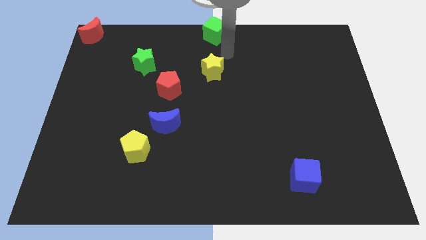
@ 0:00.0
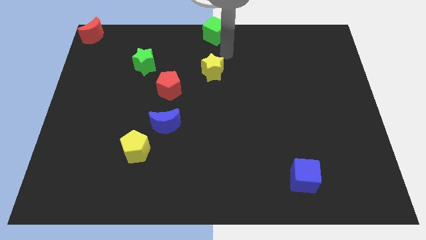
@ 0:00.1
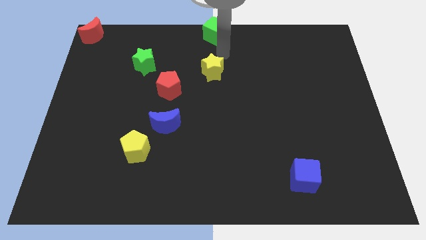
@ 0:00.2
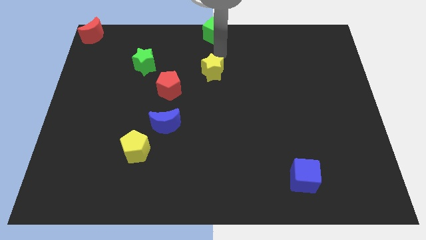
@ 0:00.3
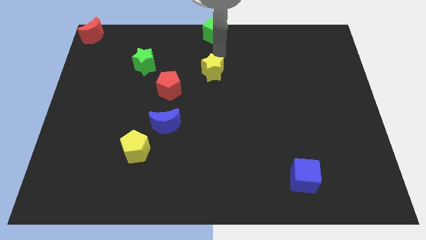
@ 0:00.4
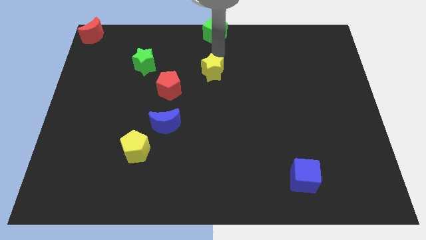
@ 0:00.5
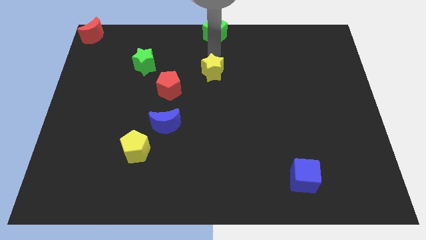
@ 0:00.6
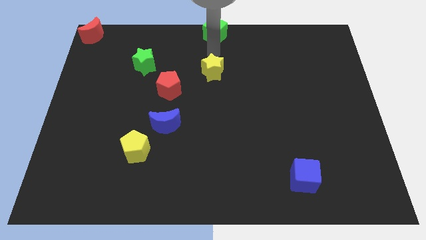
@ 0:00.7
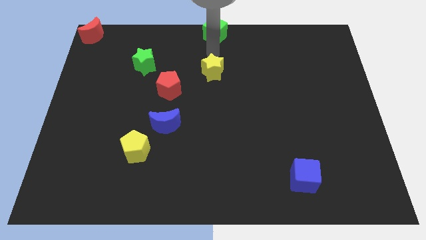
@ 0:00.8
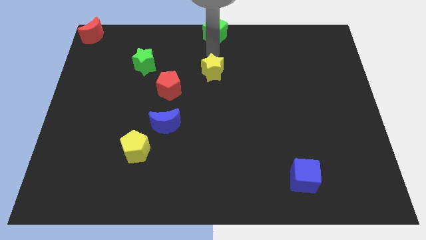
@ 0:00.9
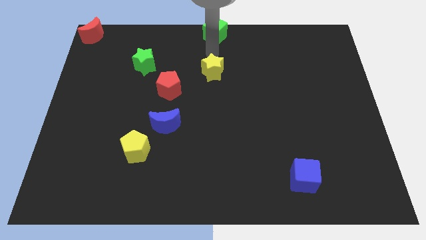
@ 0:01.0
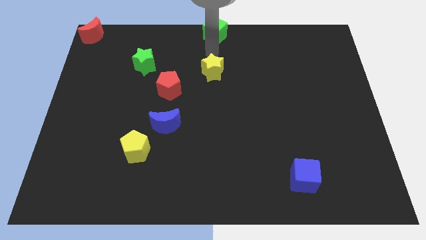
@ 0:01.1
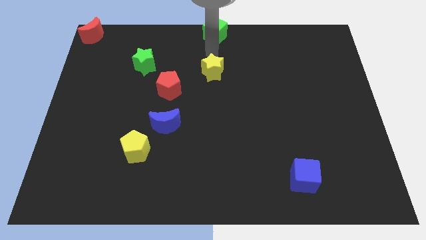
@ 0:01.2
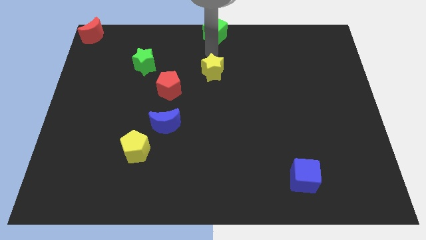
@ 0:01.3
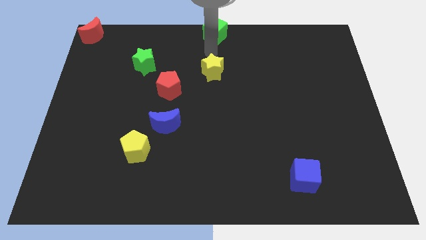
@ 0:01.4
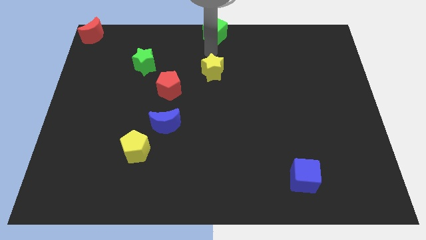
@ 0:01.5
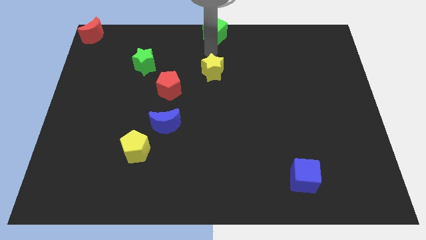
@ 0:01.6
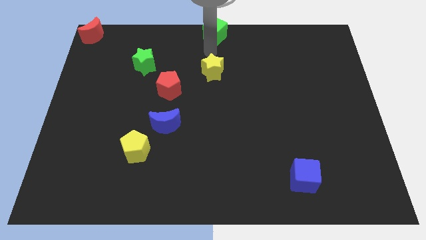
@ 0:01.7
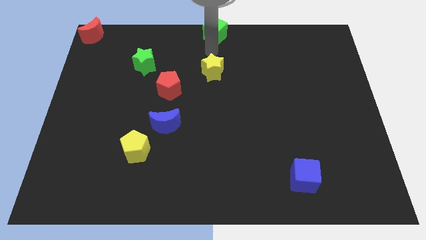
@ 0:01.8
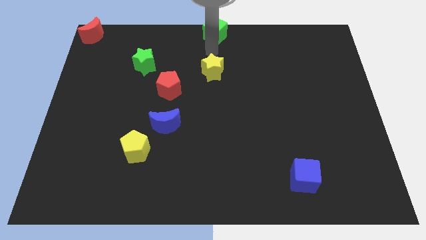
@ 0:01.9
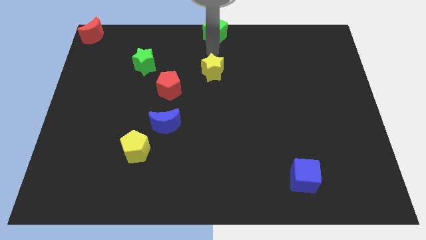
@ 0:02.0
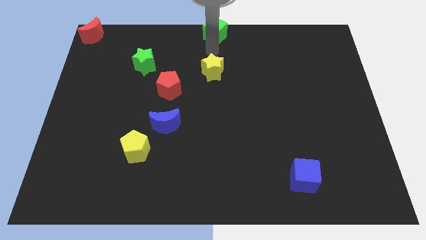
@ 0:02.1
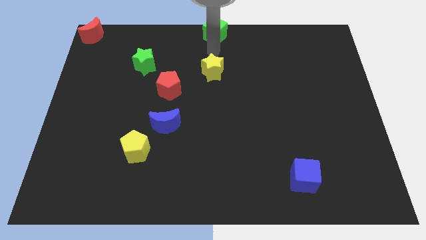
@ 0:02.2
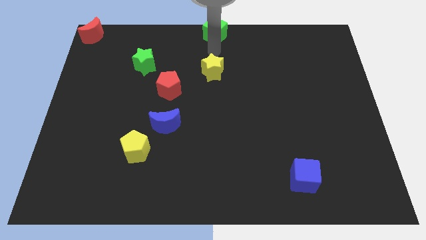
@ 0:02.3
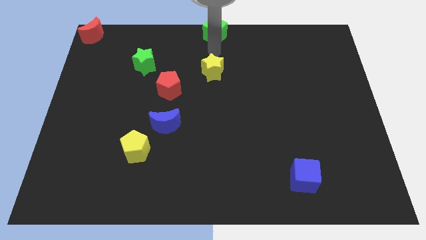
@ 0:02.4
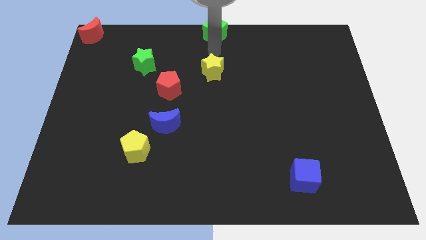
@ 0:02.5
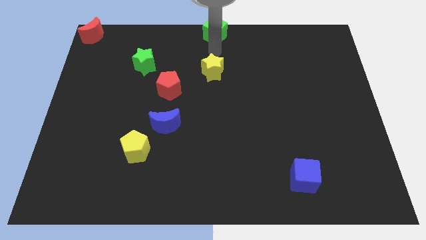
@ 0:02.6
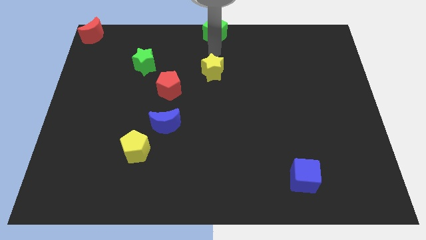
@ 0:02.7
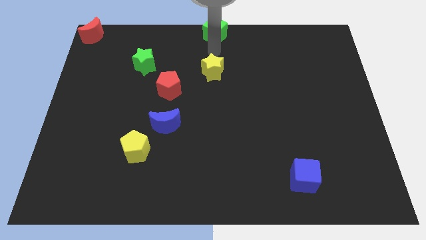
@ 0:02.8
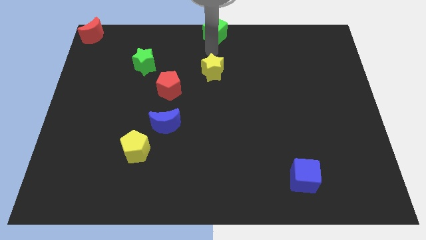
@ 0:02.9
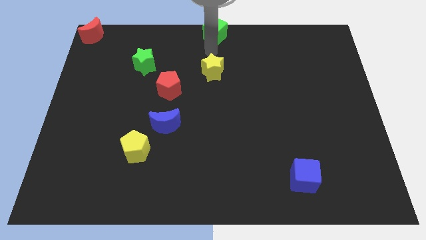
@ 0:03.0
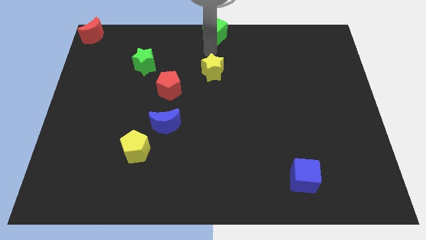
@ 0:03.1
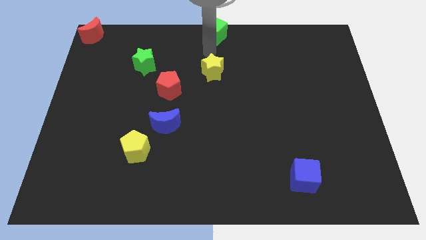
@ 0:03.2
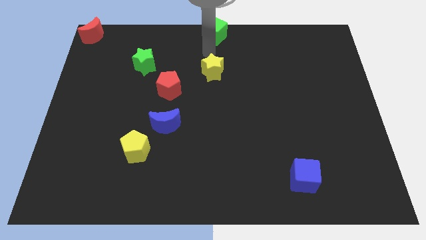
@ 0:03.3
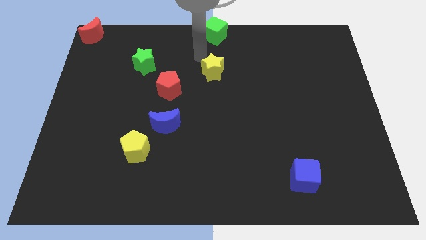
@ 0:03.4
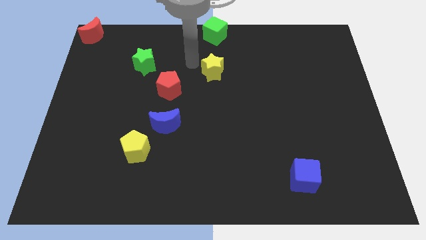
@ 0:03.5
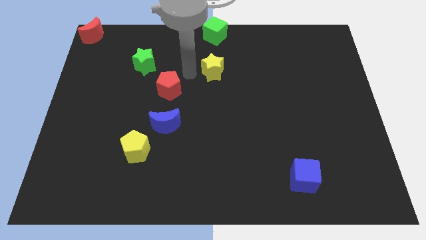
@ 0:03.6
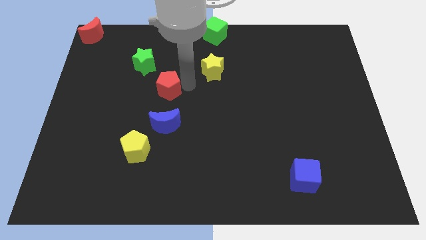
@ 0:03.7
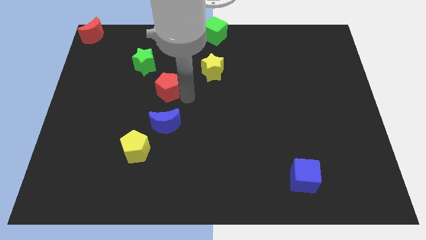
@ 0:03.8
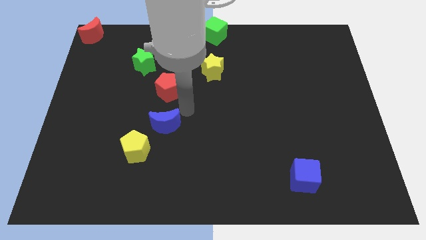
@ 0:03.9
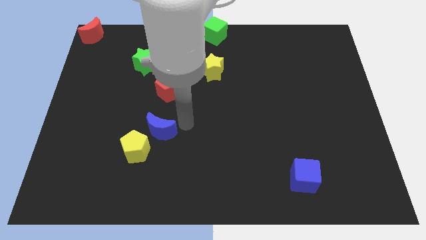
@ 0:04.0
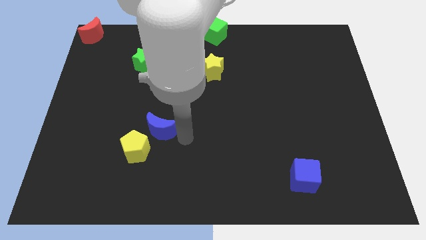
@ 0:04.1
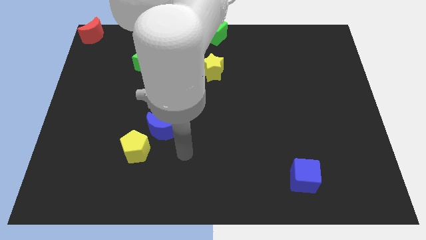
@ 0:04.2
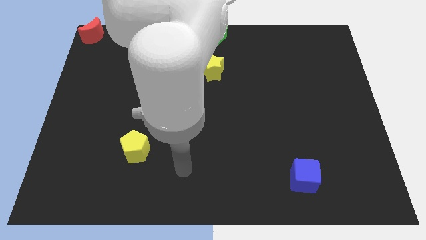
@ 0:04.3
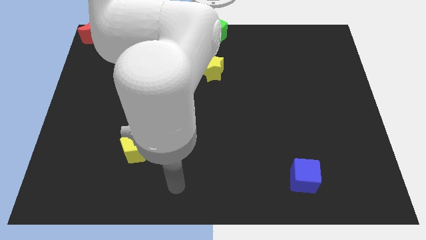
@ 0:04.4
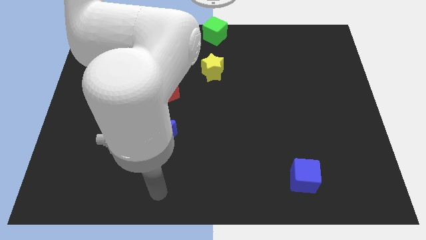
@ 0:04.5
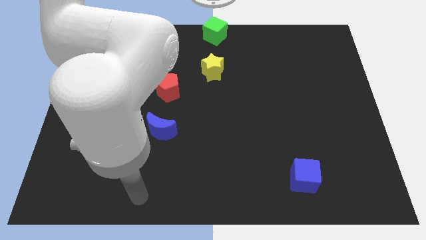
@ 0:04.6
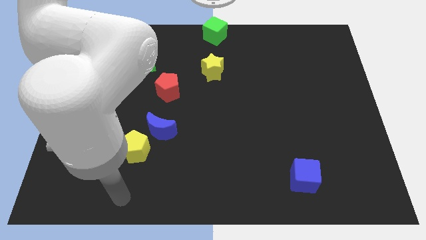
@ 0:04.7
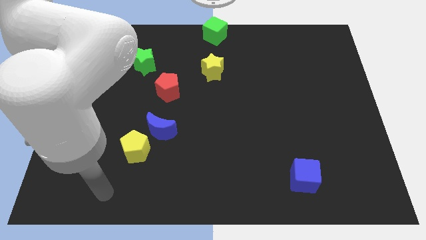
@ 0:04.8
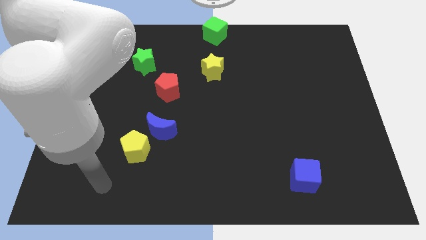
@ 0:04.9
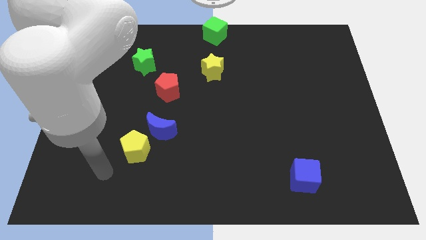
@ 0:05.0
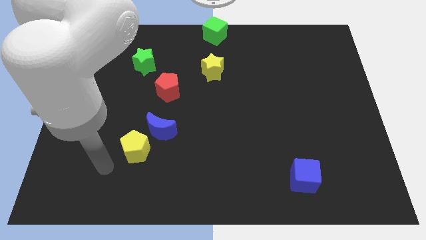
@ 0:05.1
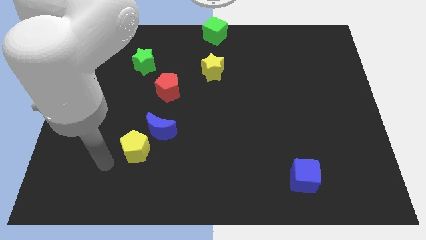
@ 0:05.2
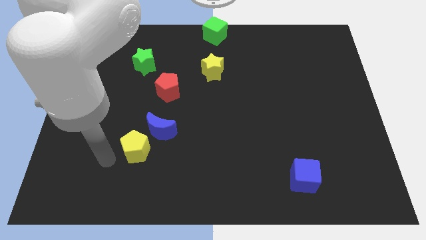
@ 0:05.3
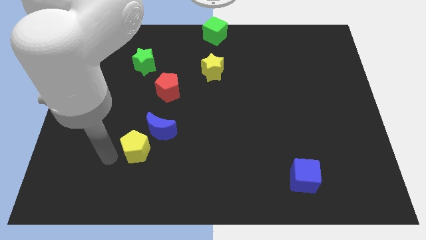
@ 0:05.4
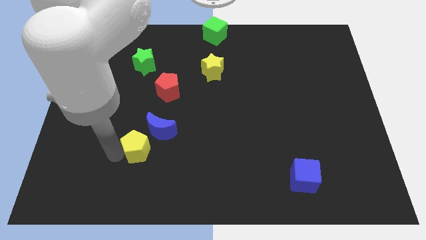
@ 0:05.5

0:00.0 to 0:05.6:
place the arm at the bottom left side of the yellow pentagon

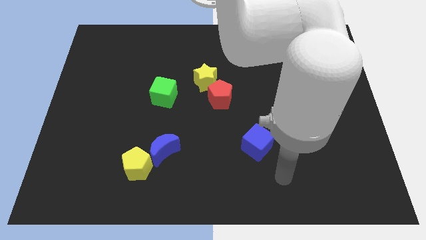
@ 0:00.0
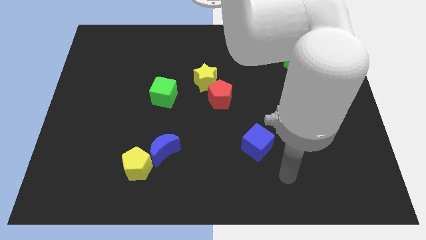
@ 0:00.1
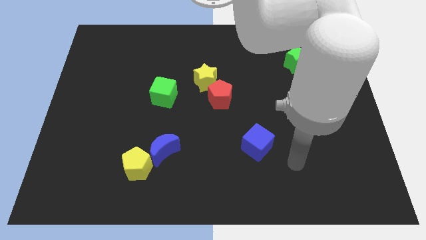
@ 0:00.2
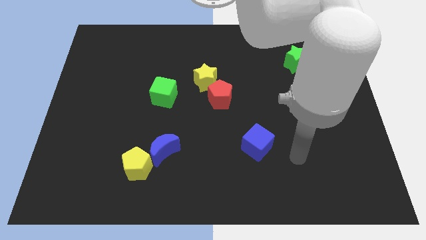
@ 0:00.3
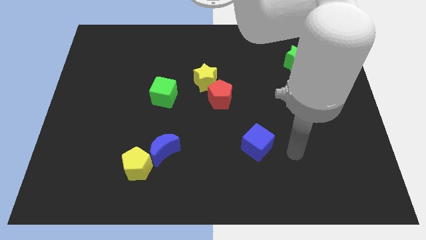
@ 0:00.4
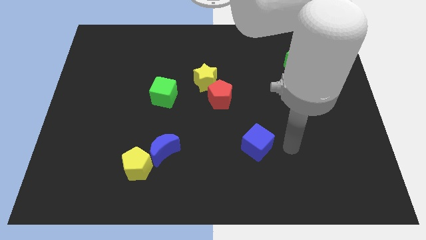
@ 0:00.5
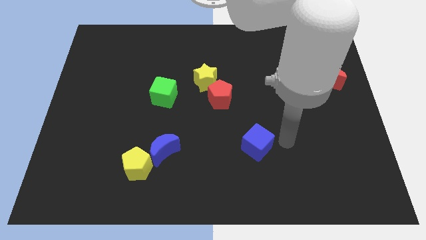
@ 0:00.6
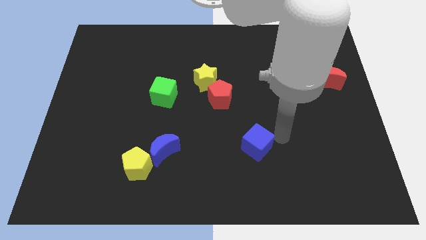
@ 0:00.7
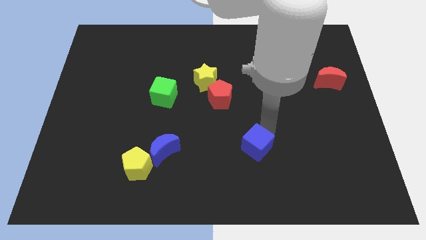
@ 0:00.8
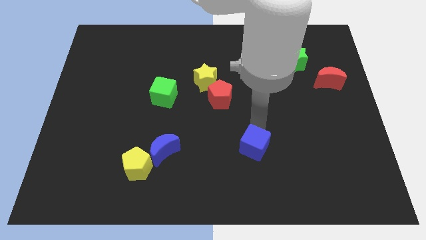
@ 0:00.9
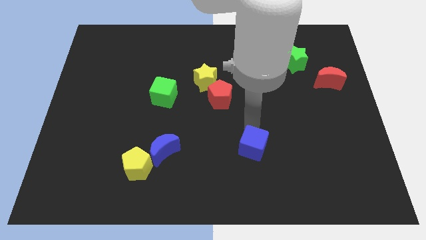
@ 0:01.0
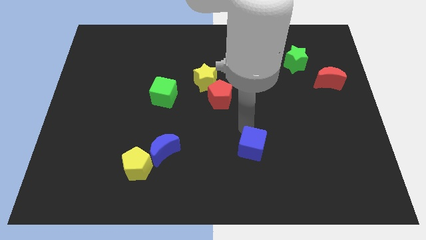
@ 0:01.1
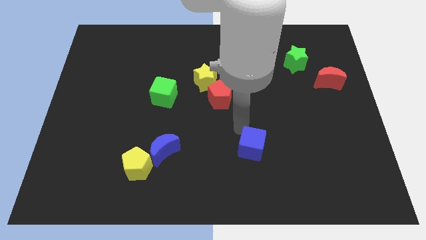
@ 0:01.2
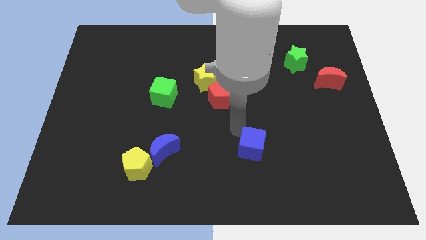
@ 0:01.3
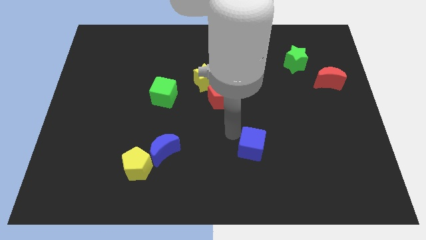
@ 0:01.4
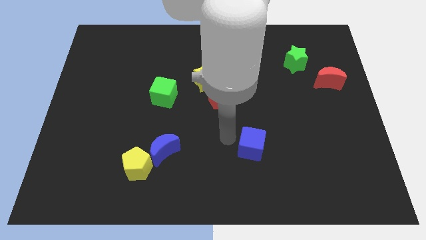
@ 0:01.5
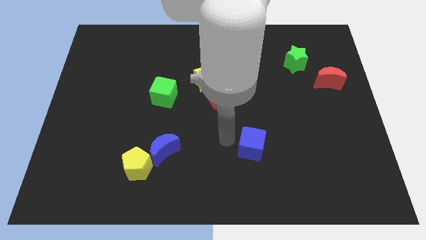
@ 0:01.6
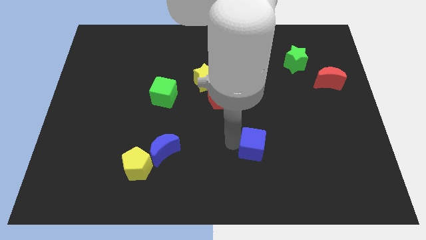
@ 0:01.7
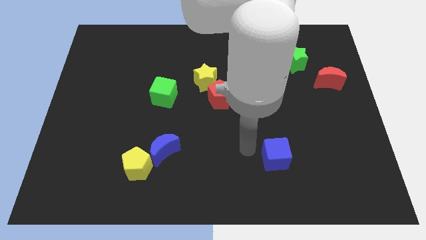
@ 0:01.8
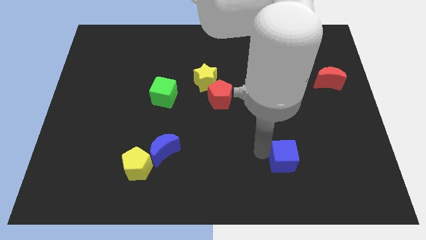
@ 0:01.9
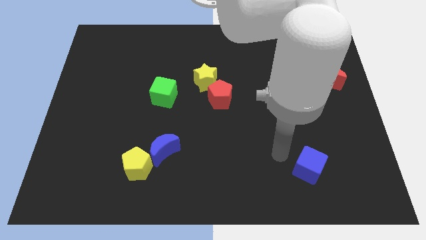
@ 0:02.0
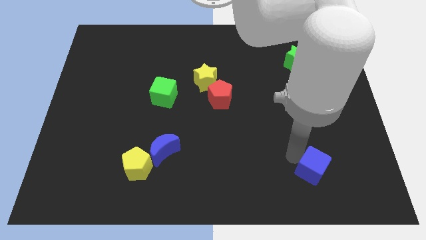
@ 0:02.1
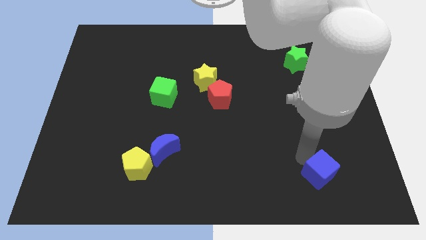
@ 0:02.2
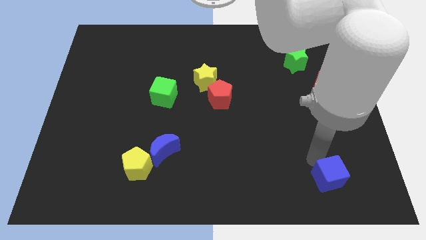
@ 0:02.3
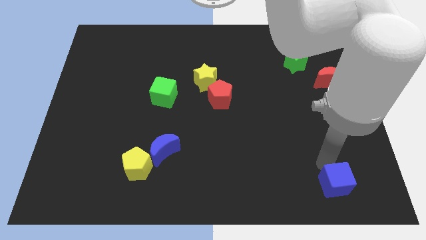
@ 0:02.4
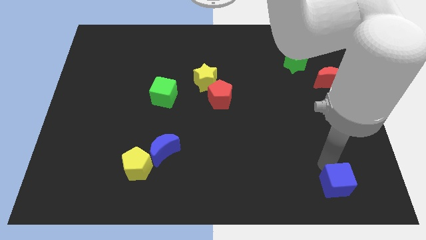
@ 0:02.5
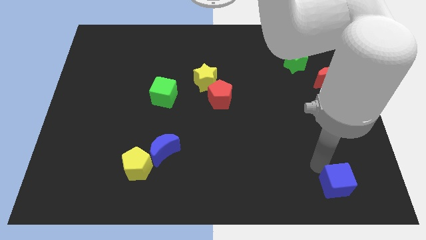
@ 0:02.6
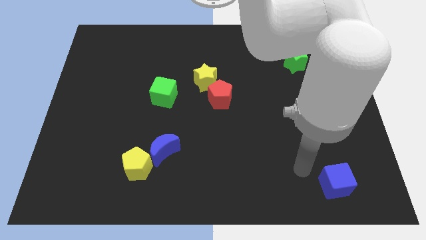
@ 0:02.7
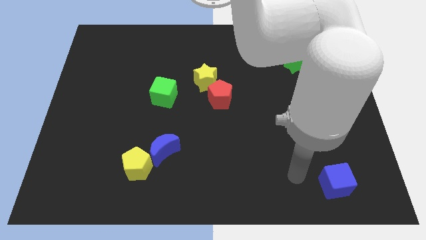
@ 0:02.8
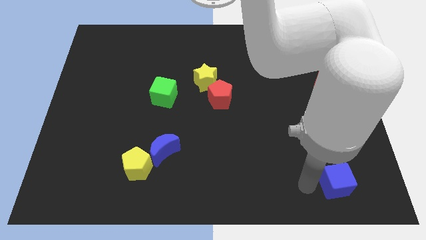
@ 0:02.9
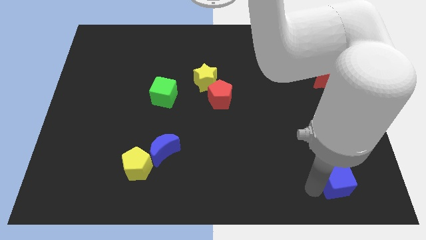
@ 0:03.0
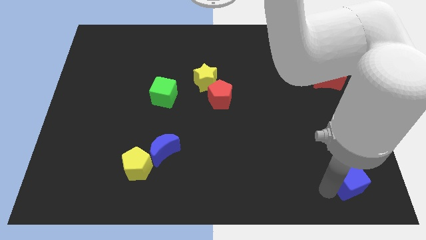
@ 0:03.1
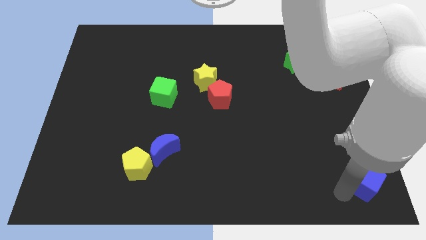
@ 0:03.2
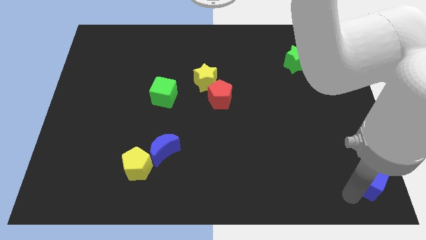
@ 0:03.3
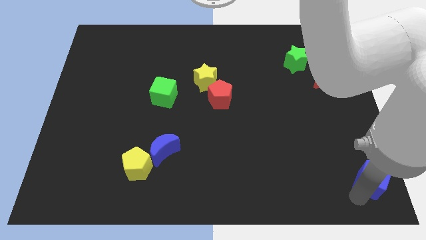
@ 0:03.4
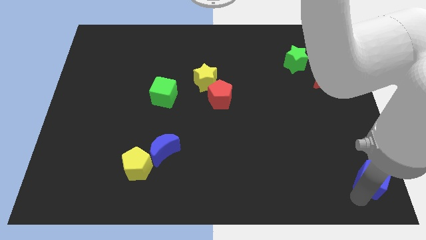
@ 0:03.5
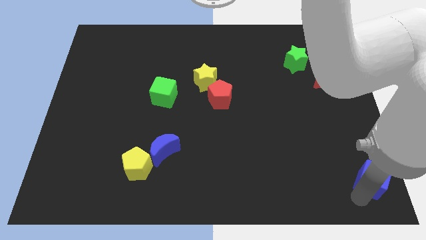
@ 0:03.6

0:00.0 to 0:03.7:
move the blue cube bottom right corner of the board
